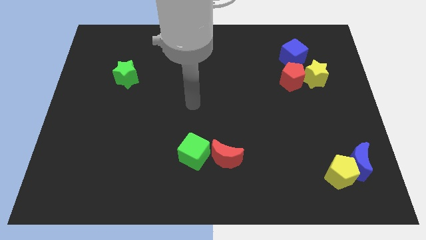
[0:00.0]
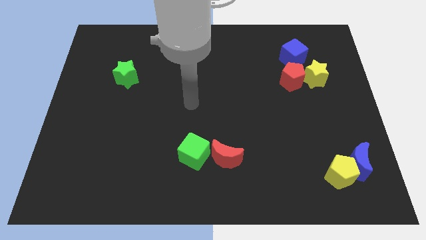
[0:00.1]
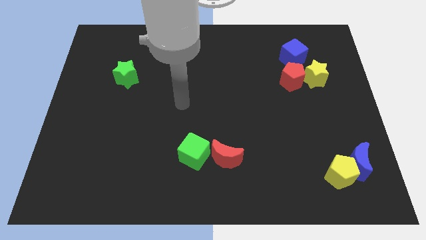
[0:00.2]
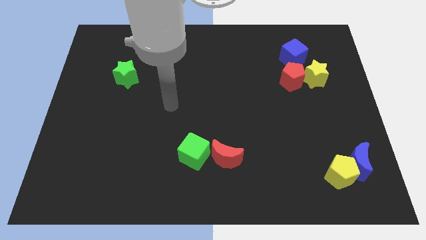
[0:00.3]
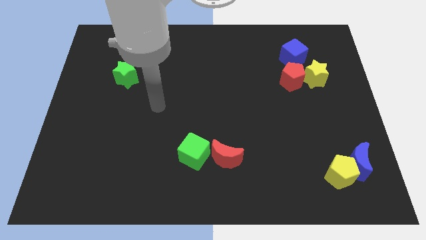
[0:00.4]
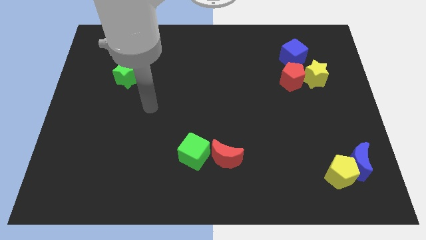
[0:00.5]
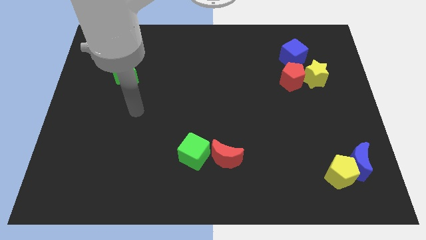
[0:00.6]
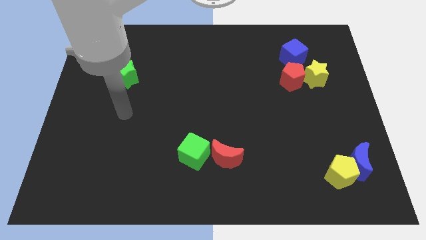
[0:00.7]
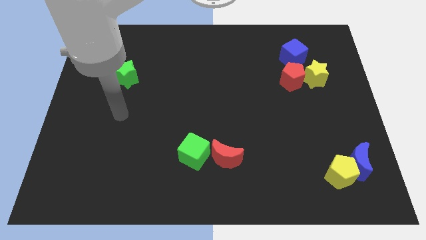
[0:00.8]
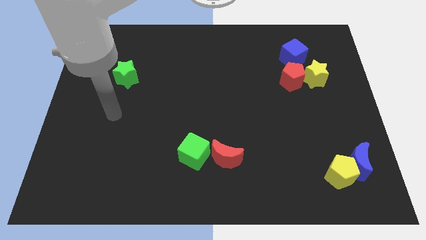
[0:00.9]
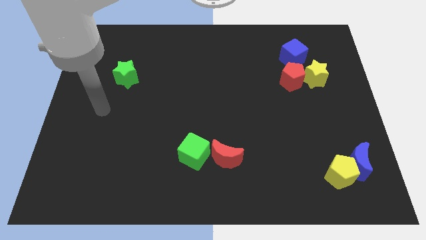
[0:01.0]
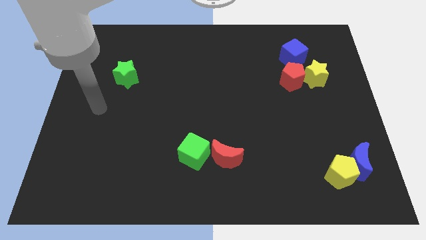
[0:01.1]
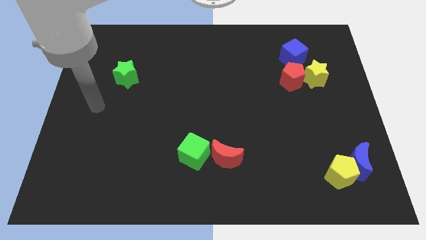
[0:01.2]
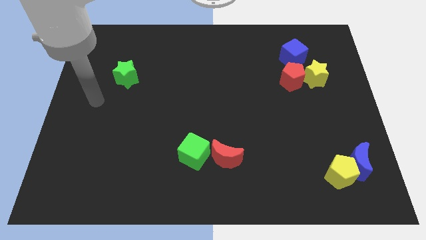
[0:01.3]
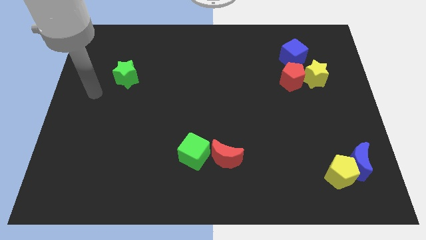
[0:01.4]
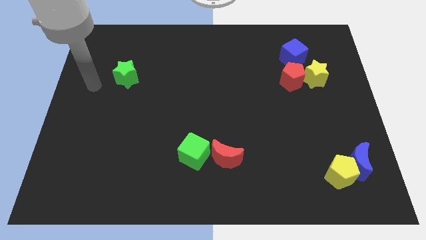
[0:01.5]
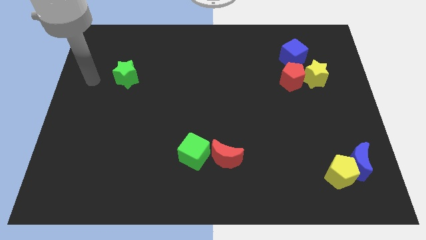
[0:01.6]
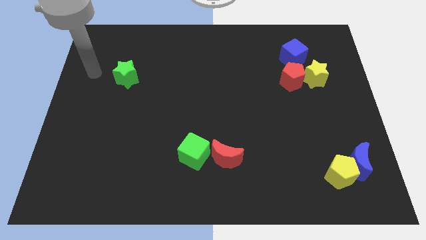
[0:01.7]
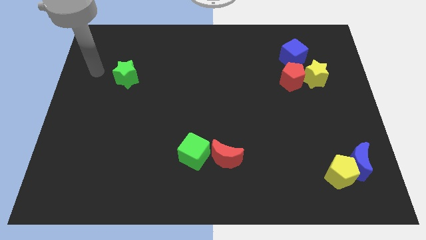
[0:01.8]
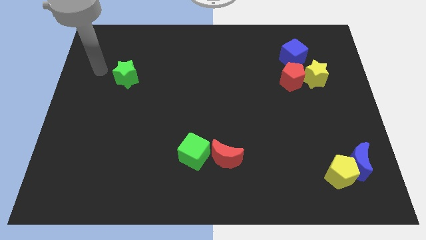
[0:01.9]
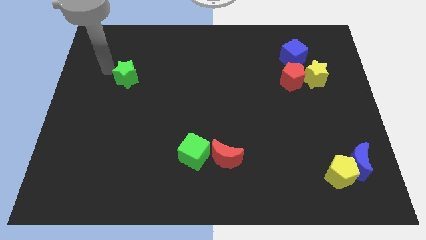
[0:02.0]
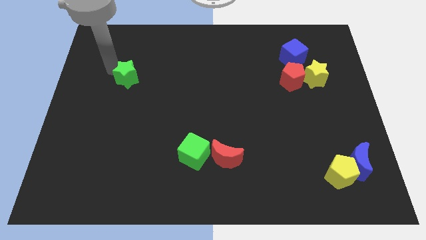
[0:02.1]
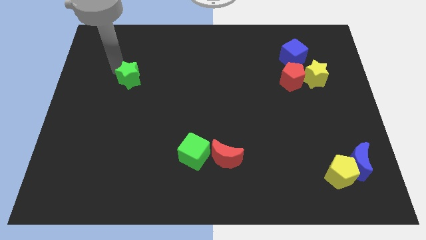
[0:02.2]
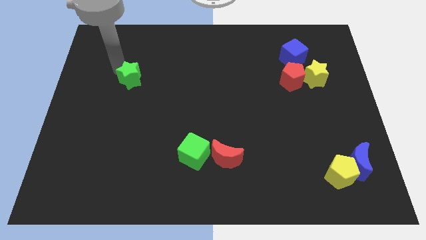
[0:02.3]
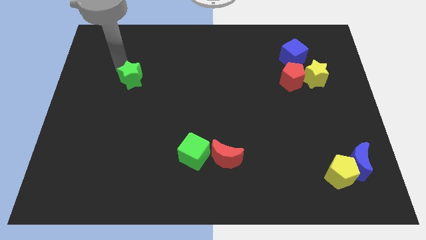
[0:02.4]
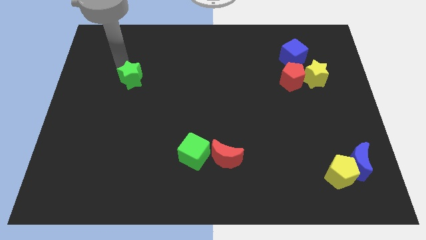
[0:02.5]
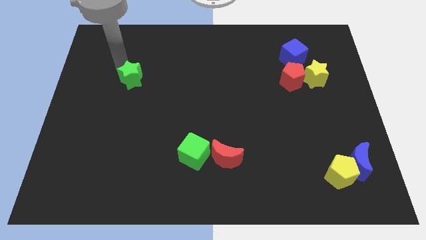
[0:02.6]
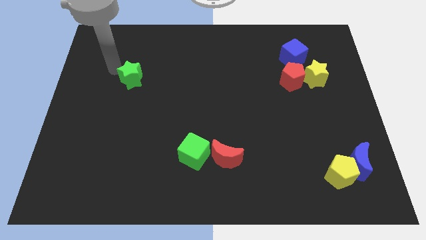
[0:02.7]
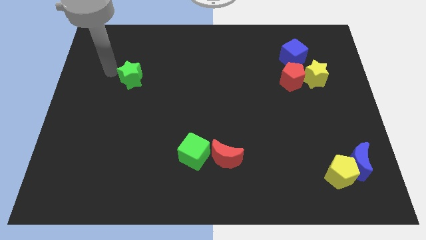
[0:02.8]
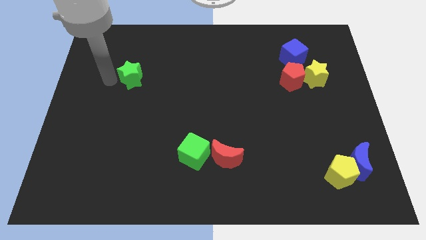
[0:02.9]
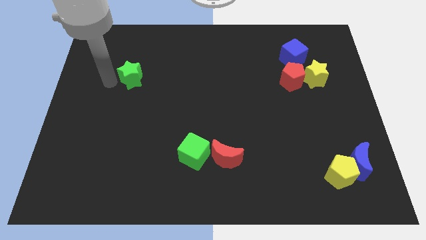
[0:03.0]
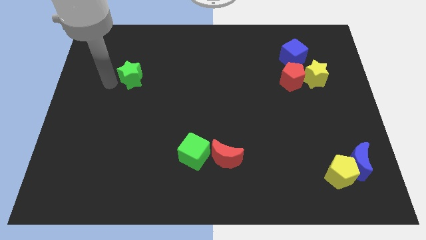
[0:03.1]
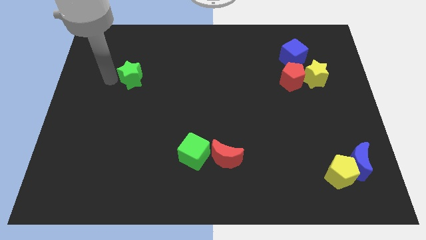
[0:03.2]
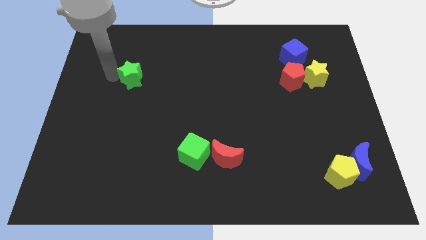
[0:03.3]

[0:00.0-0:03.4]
push the green star slightly to the right

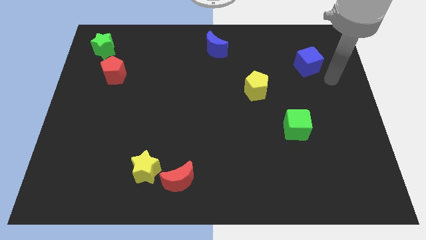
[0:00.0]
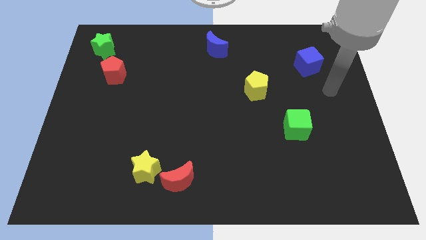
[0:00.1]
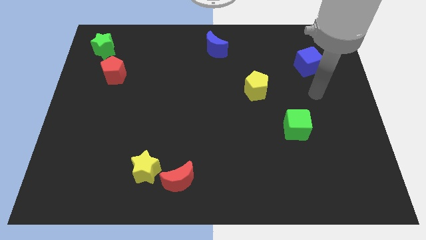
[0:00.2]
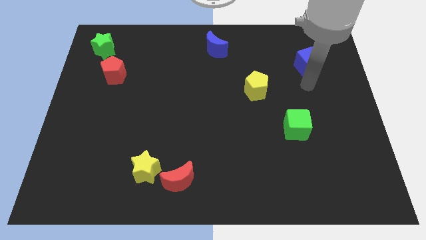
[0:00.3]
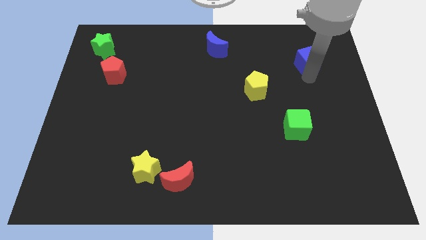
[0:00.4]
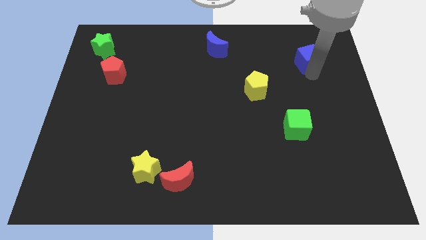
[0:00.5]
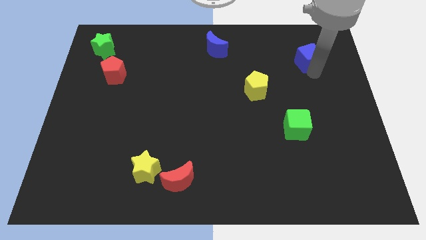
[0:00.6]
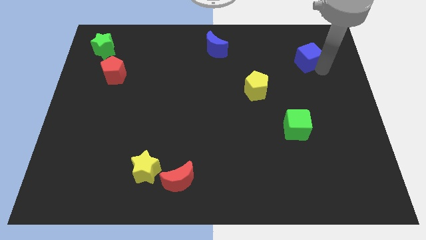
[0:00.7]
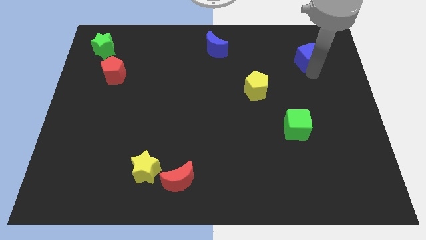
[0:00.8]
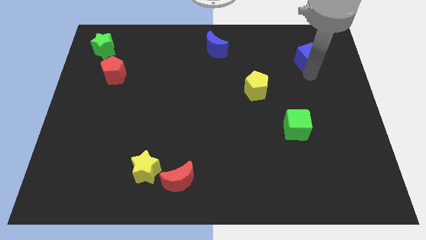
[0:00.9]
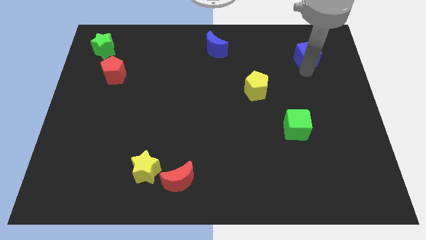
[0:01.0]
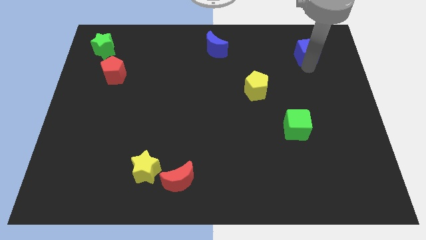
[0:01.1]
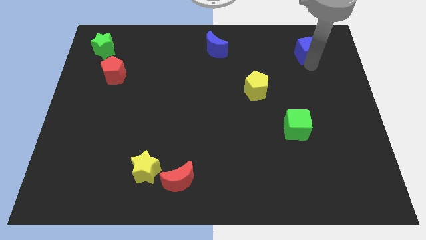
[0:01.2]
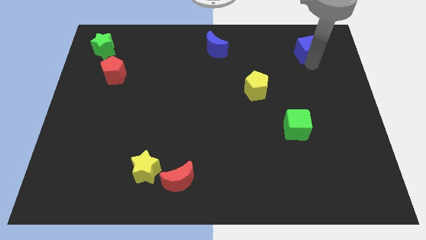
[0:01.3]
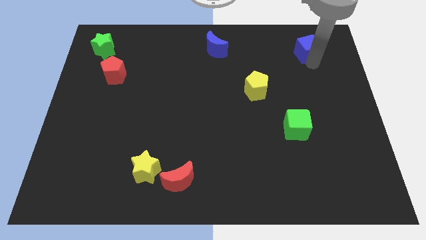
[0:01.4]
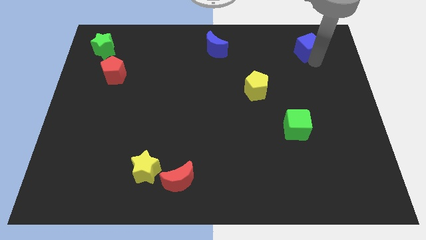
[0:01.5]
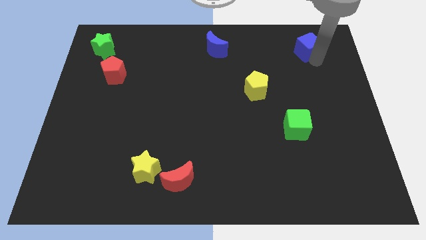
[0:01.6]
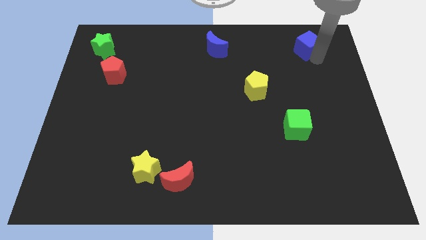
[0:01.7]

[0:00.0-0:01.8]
place blue cube towards top right corner of board

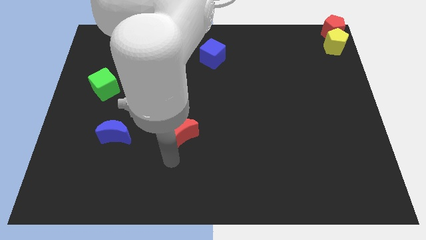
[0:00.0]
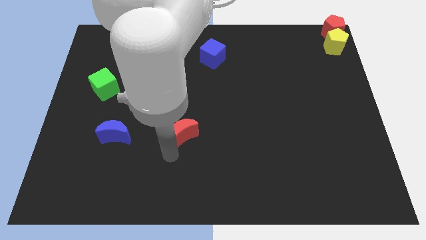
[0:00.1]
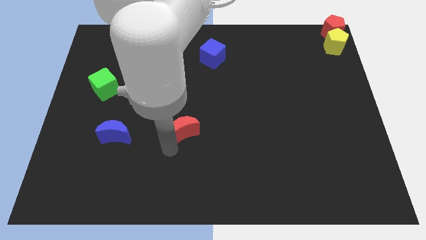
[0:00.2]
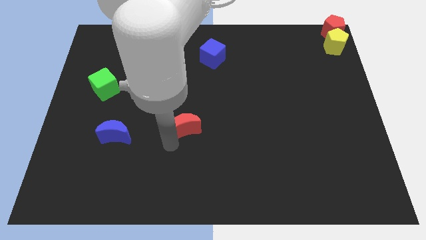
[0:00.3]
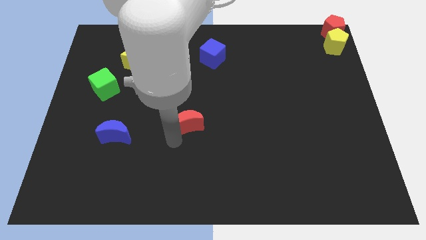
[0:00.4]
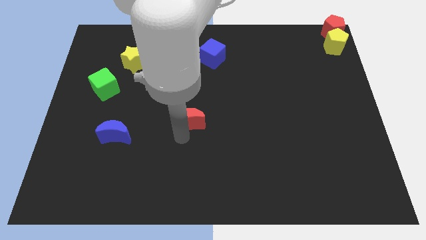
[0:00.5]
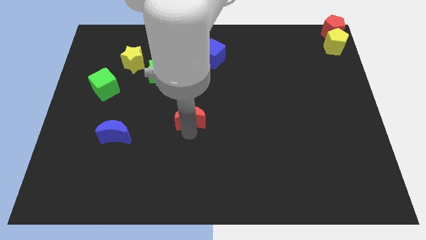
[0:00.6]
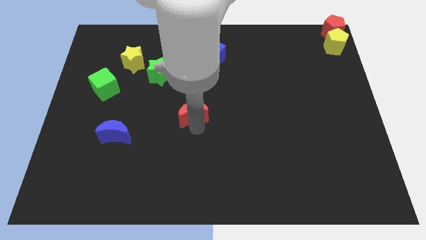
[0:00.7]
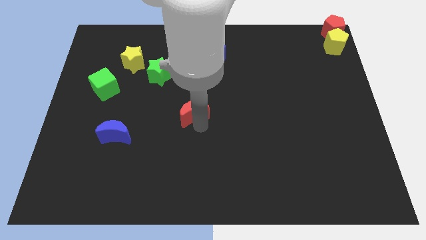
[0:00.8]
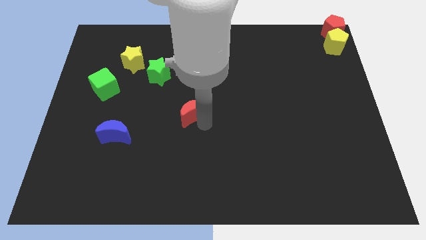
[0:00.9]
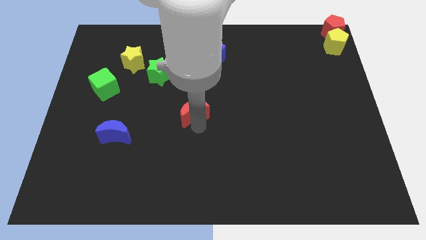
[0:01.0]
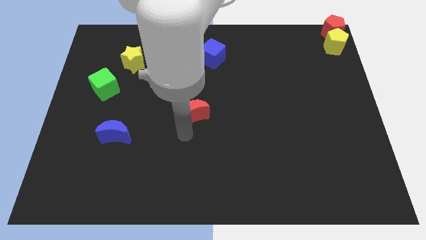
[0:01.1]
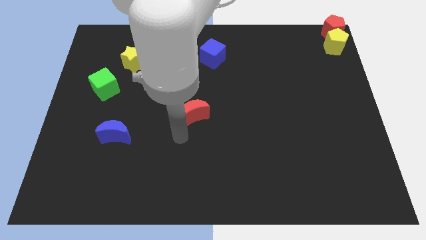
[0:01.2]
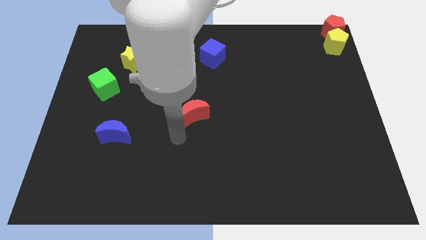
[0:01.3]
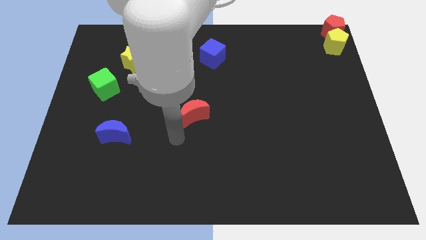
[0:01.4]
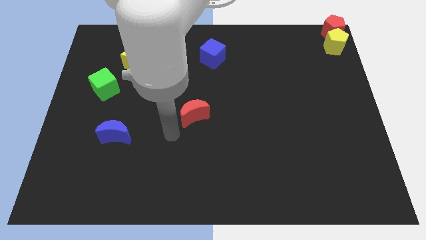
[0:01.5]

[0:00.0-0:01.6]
push the red crescent to the top of the board

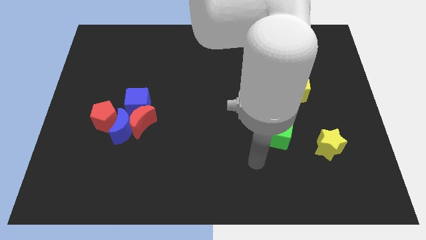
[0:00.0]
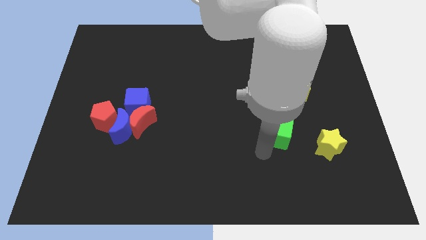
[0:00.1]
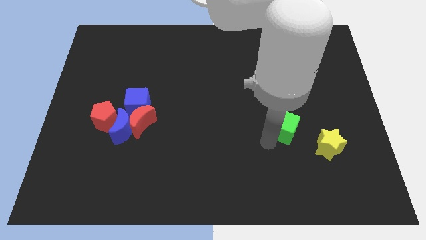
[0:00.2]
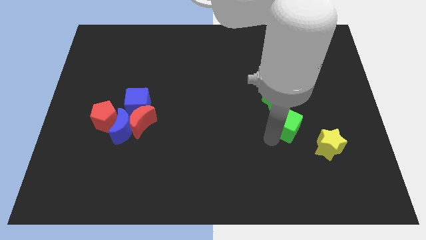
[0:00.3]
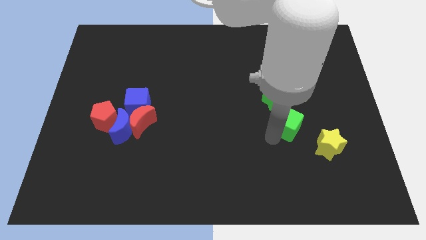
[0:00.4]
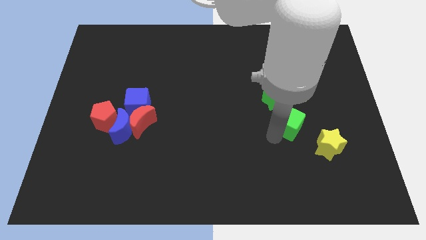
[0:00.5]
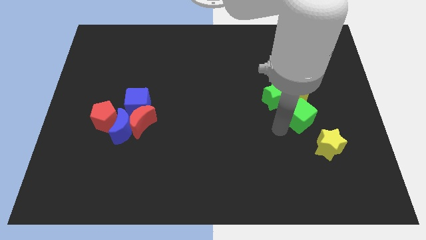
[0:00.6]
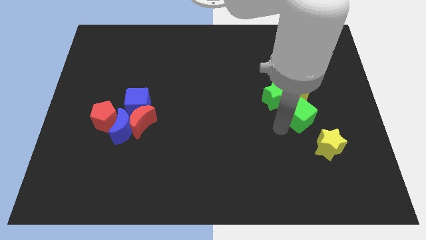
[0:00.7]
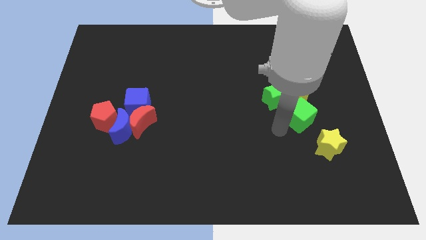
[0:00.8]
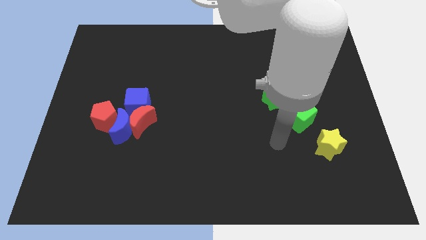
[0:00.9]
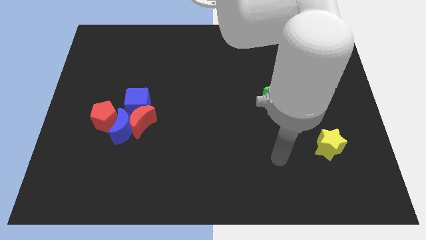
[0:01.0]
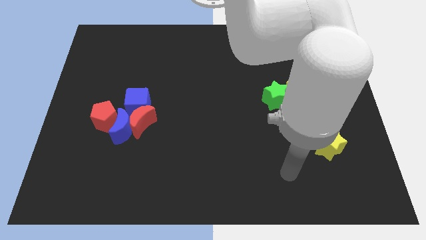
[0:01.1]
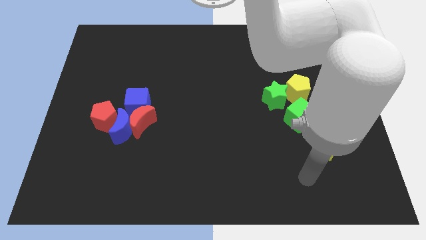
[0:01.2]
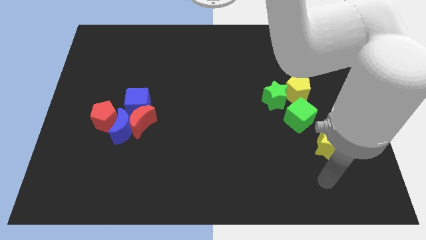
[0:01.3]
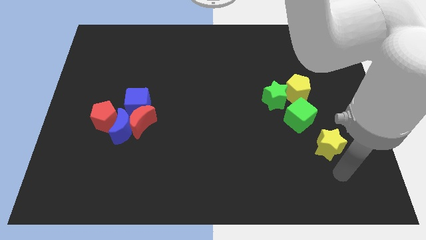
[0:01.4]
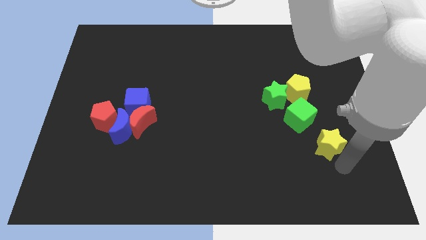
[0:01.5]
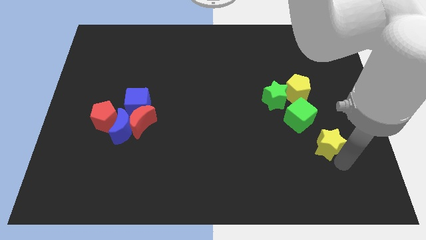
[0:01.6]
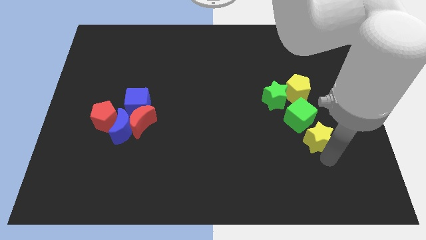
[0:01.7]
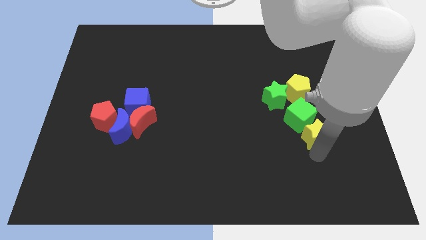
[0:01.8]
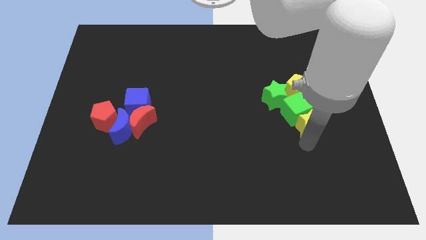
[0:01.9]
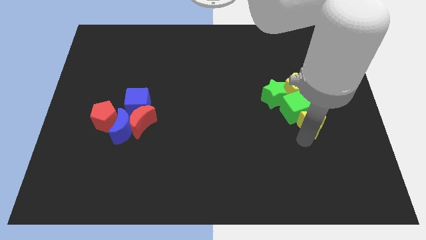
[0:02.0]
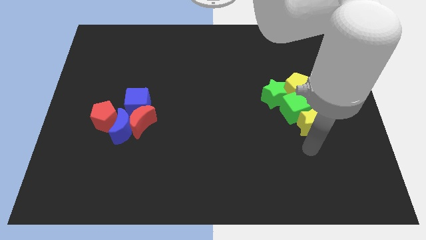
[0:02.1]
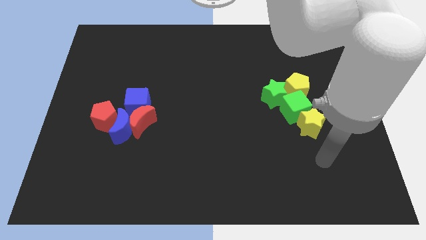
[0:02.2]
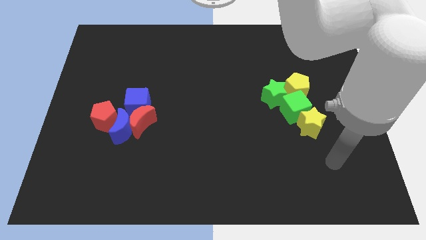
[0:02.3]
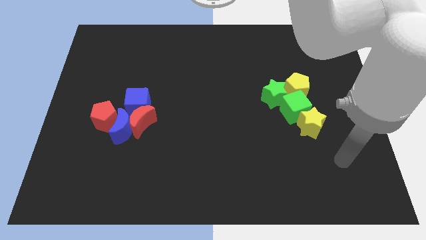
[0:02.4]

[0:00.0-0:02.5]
push the yellow star into the group of blocks
